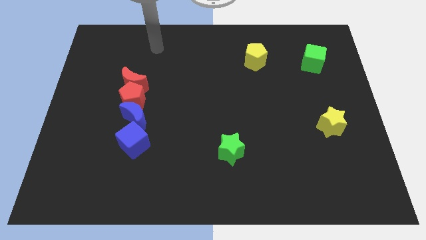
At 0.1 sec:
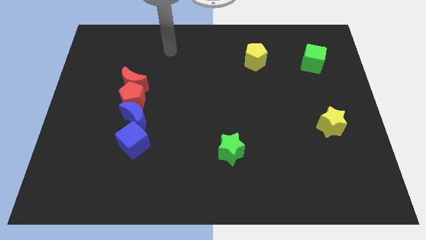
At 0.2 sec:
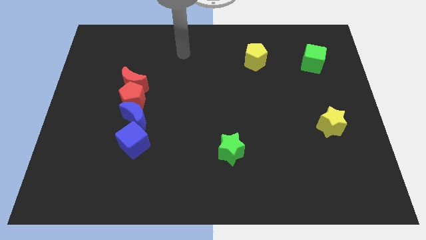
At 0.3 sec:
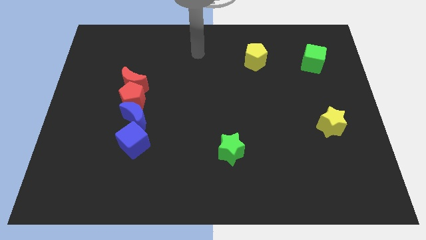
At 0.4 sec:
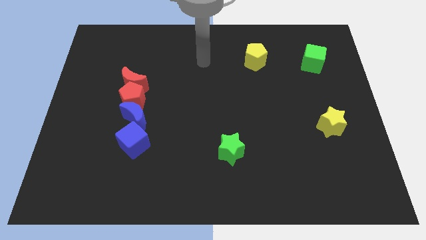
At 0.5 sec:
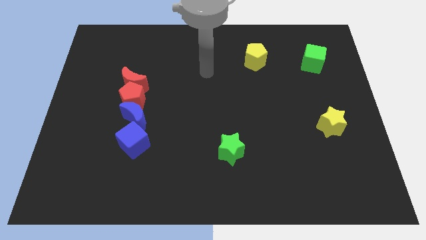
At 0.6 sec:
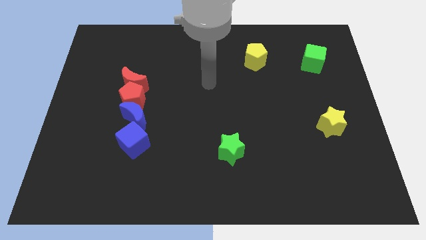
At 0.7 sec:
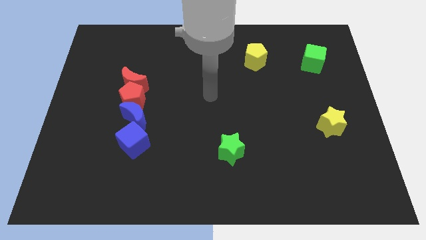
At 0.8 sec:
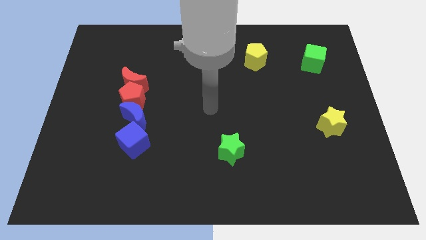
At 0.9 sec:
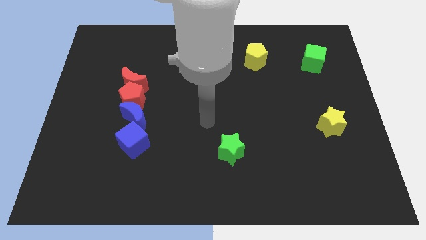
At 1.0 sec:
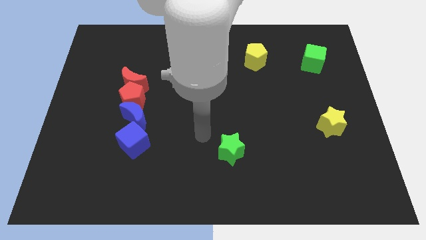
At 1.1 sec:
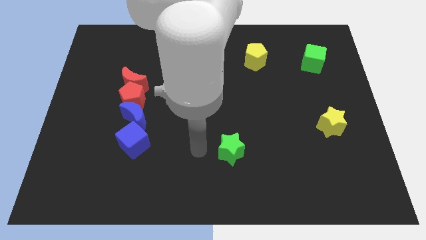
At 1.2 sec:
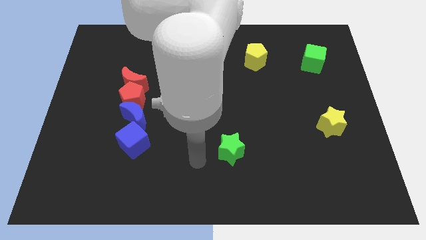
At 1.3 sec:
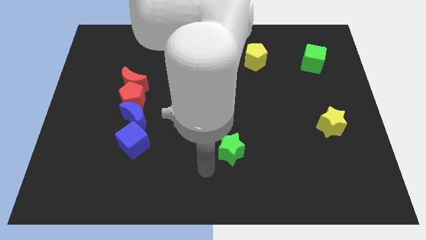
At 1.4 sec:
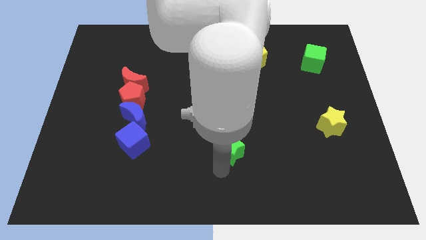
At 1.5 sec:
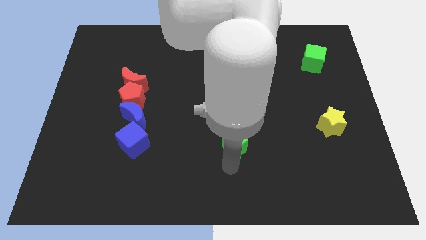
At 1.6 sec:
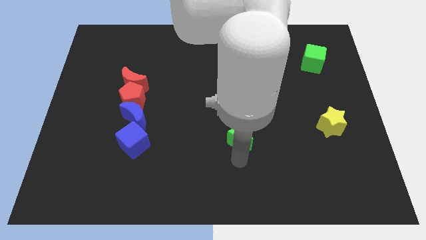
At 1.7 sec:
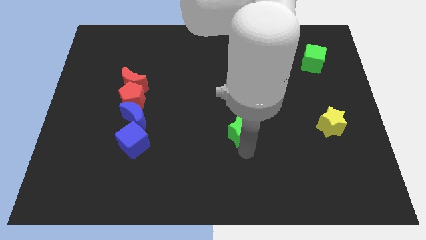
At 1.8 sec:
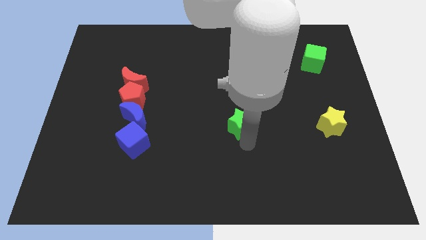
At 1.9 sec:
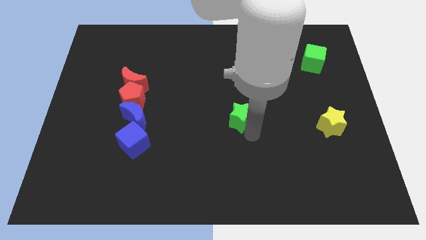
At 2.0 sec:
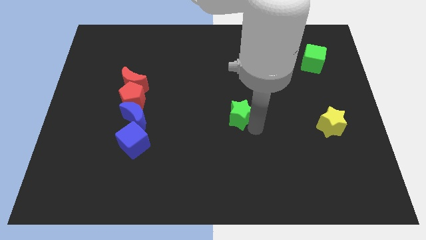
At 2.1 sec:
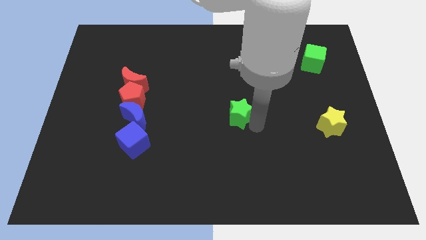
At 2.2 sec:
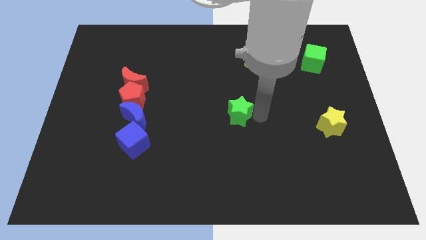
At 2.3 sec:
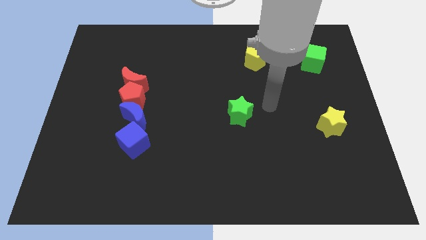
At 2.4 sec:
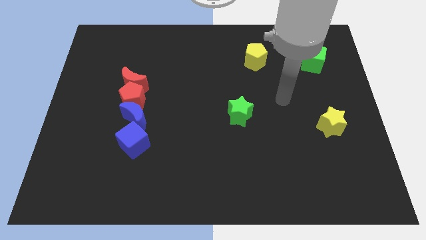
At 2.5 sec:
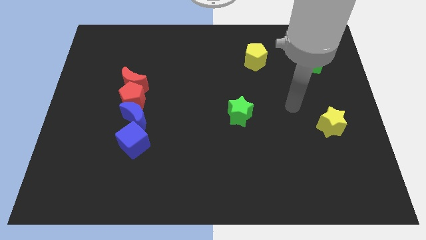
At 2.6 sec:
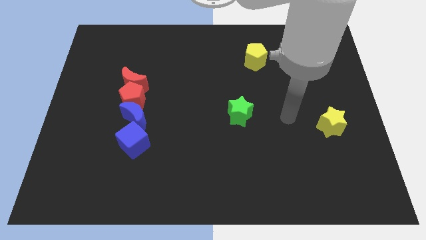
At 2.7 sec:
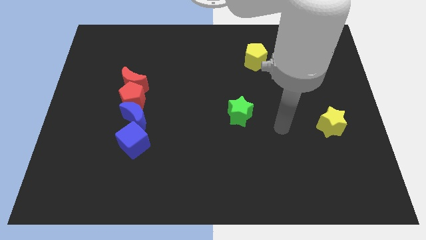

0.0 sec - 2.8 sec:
place the green star the right of the blue moon

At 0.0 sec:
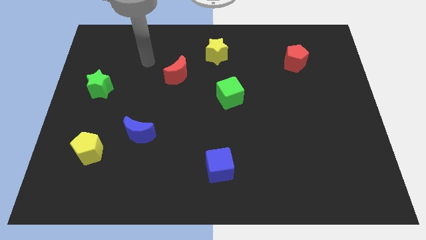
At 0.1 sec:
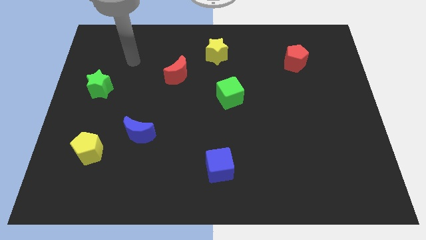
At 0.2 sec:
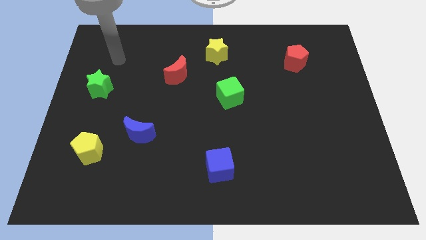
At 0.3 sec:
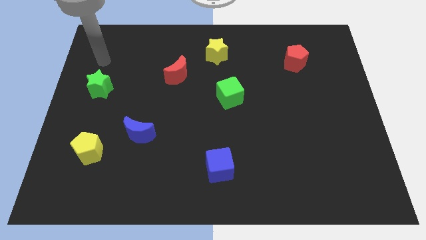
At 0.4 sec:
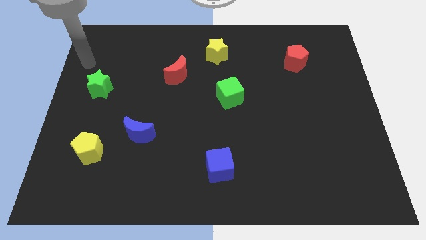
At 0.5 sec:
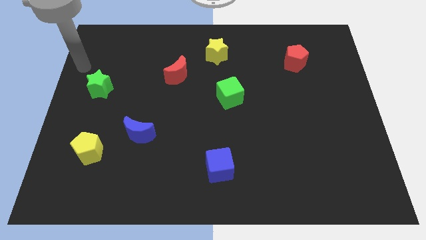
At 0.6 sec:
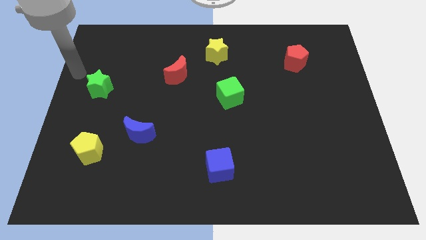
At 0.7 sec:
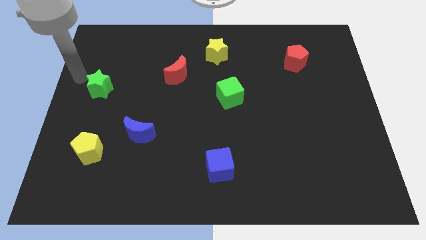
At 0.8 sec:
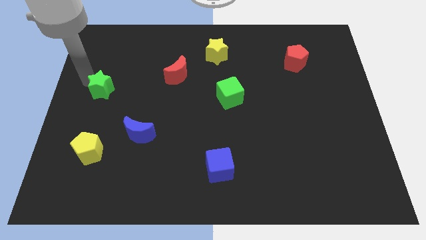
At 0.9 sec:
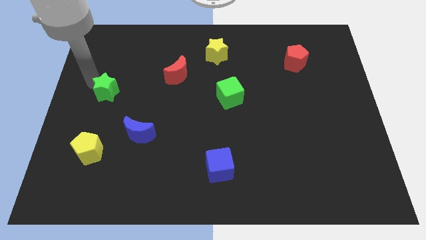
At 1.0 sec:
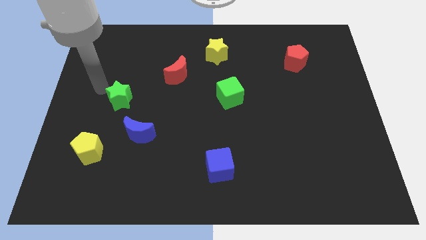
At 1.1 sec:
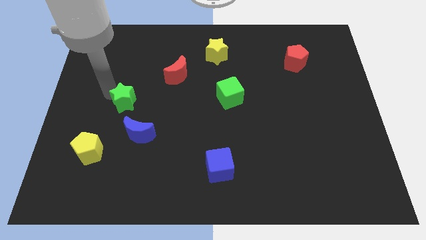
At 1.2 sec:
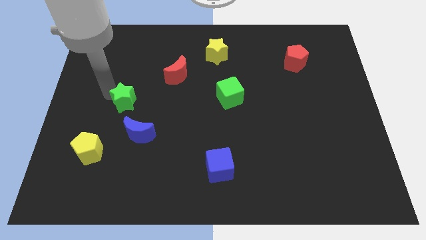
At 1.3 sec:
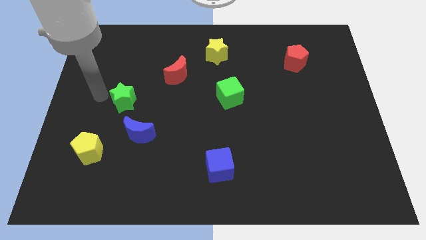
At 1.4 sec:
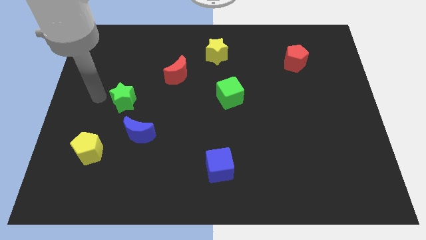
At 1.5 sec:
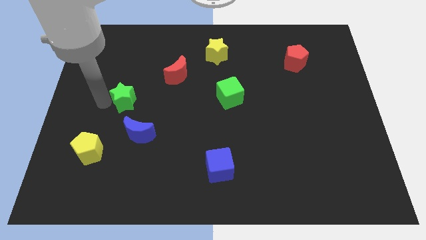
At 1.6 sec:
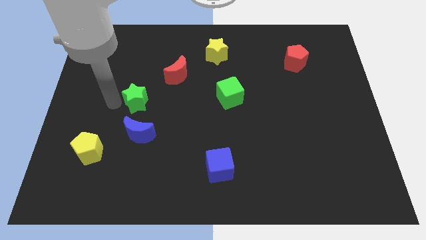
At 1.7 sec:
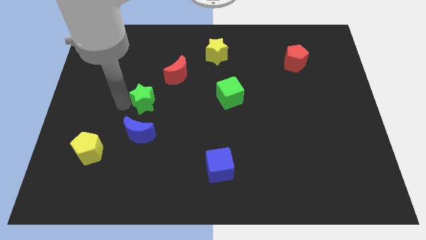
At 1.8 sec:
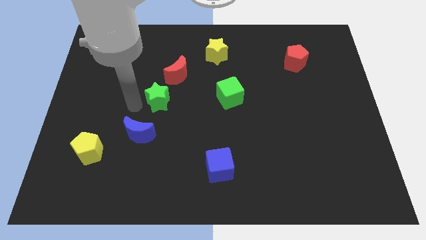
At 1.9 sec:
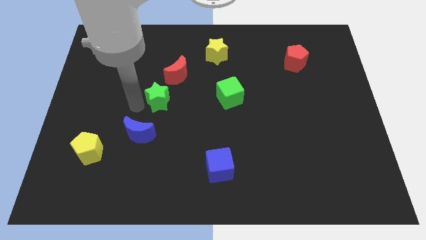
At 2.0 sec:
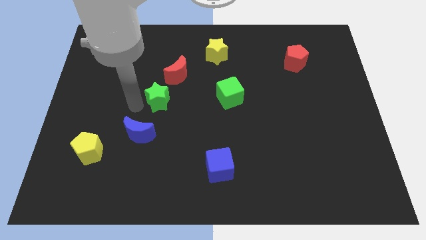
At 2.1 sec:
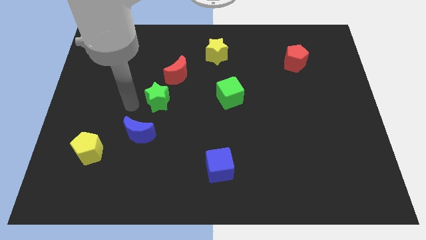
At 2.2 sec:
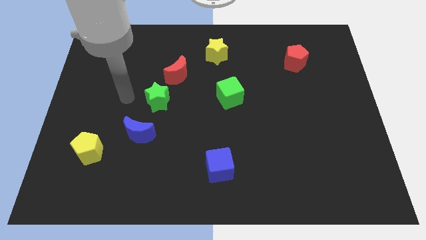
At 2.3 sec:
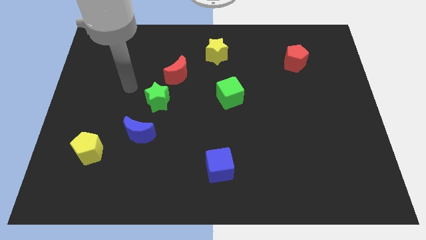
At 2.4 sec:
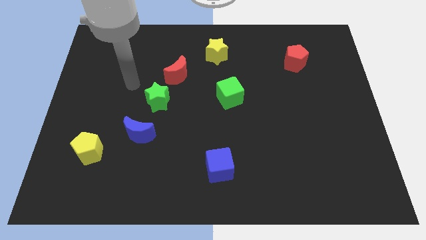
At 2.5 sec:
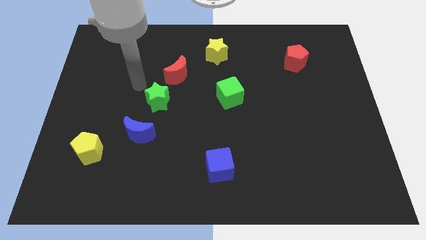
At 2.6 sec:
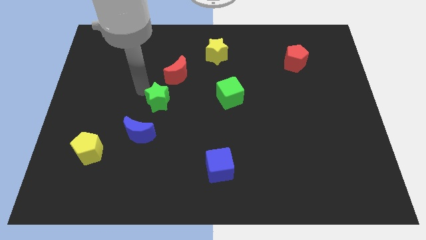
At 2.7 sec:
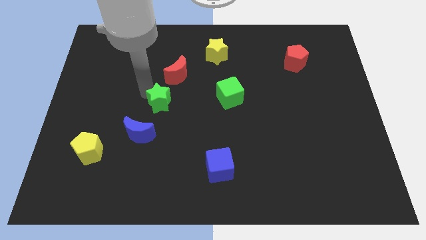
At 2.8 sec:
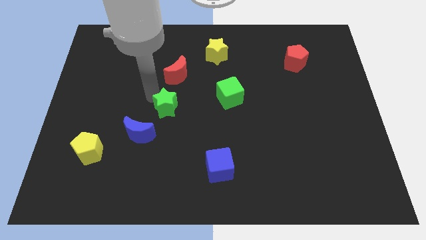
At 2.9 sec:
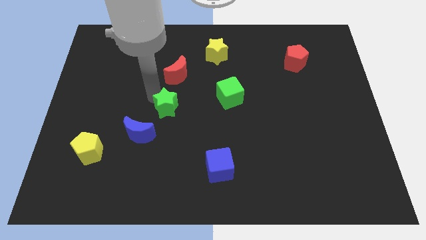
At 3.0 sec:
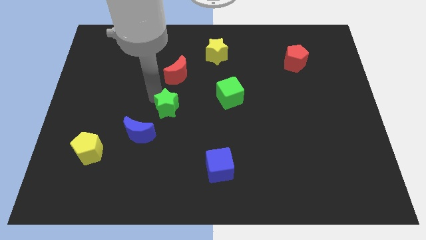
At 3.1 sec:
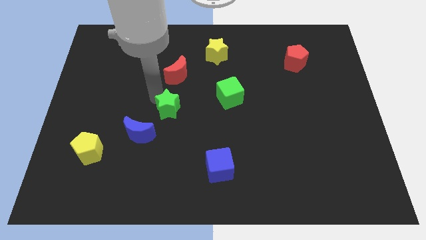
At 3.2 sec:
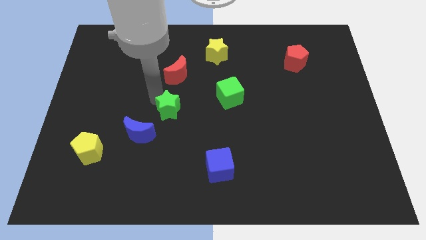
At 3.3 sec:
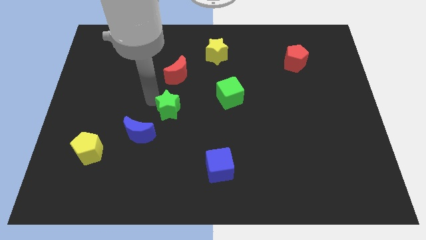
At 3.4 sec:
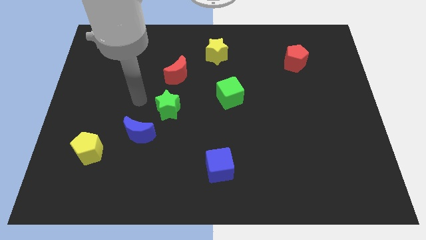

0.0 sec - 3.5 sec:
move the green star to the bottom side of the red crescent

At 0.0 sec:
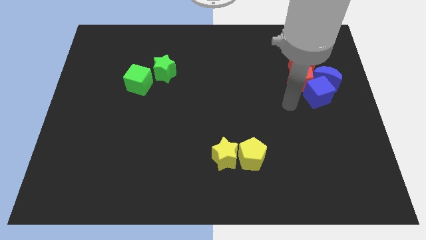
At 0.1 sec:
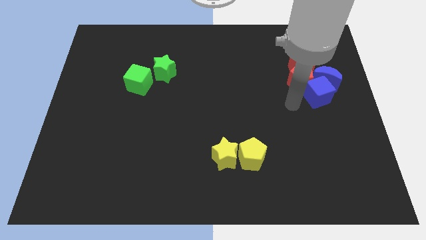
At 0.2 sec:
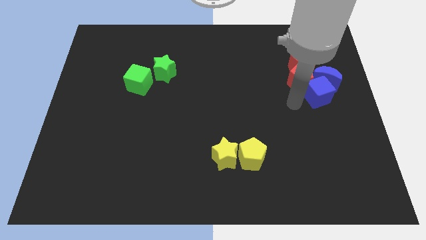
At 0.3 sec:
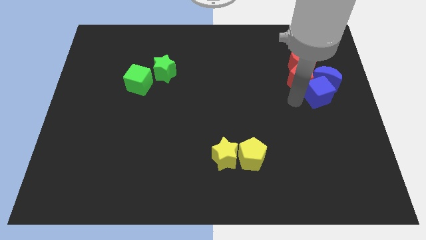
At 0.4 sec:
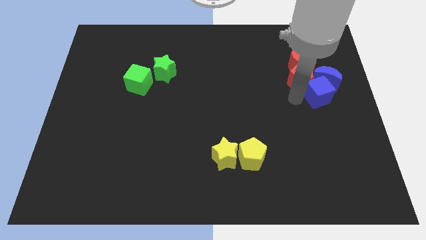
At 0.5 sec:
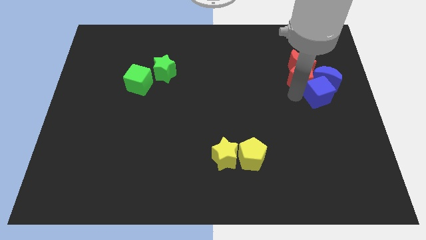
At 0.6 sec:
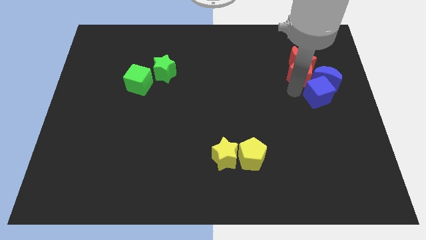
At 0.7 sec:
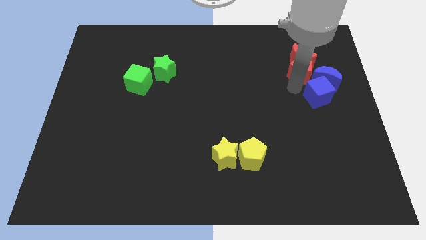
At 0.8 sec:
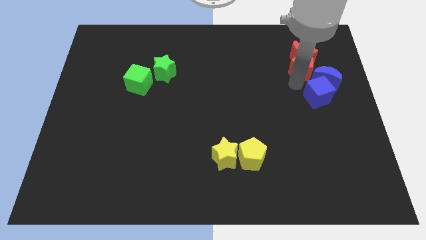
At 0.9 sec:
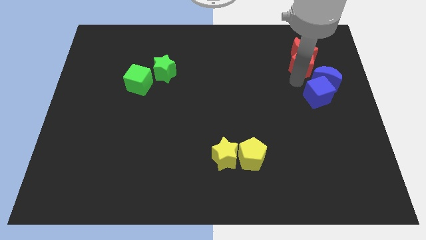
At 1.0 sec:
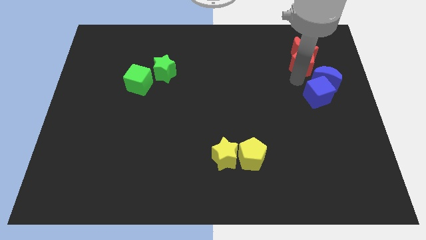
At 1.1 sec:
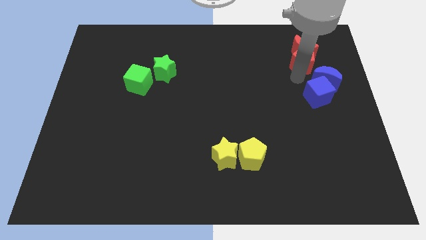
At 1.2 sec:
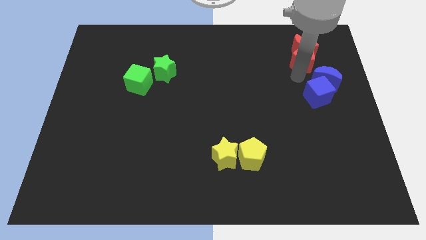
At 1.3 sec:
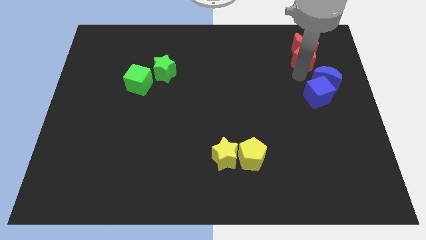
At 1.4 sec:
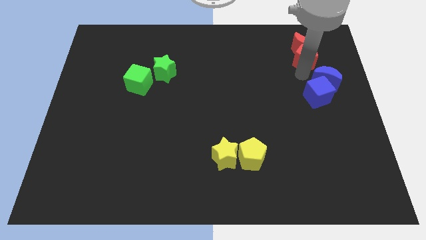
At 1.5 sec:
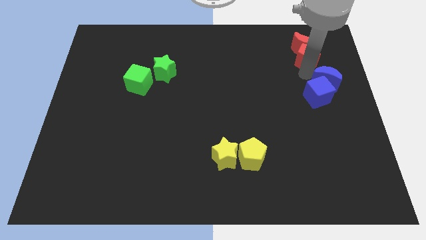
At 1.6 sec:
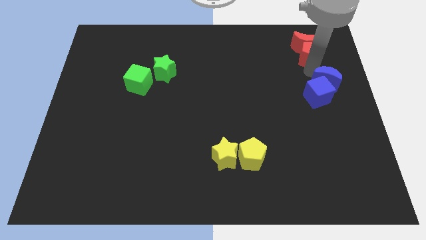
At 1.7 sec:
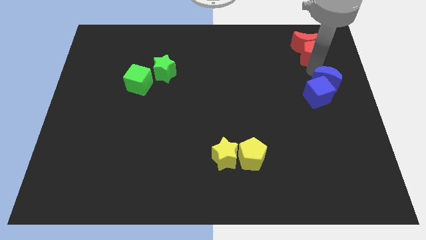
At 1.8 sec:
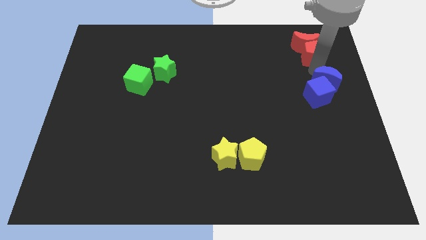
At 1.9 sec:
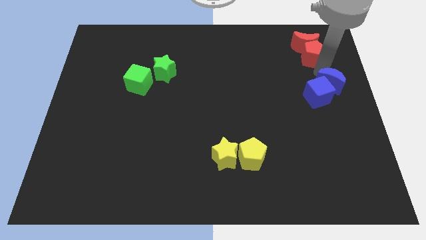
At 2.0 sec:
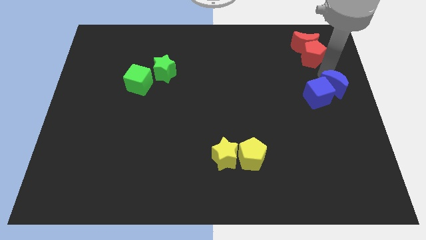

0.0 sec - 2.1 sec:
separate red blocks from blue blocks

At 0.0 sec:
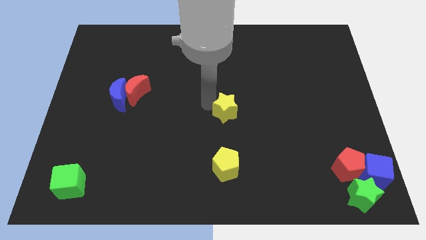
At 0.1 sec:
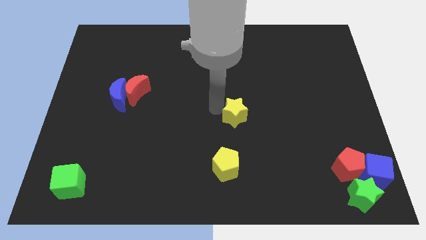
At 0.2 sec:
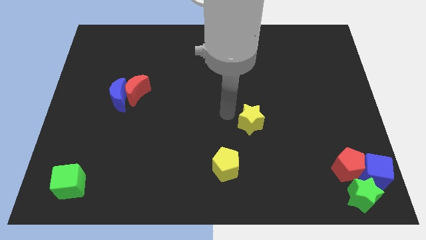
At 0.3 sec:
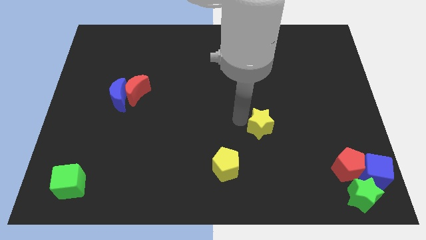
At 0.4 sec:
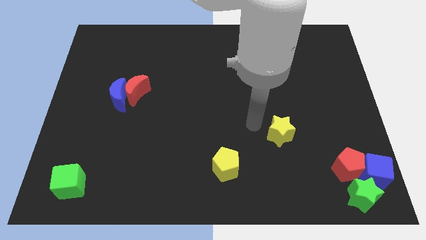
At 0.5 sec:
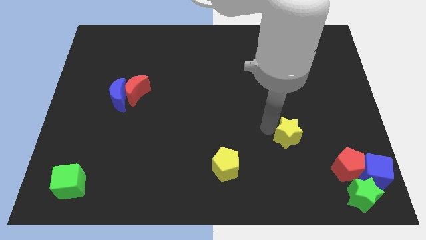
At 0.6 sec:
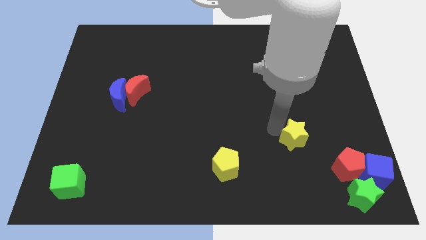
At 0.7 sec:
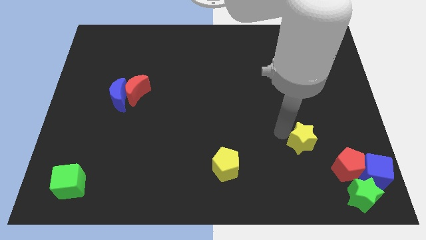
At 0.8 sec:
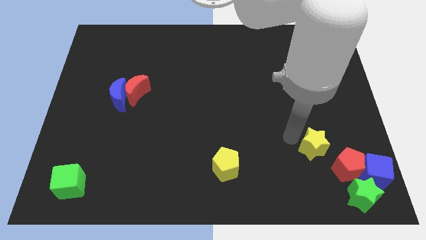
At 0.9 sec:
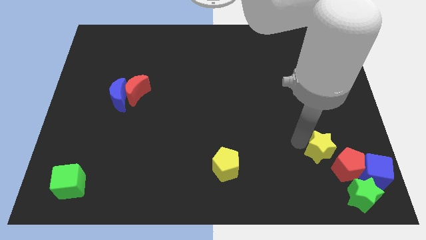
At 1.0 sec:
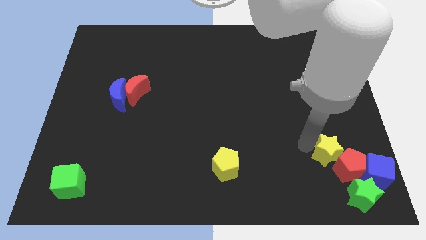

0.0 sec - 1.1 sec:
push the yellow star diagonal to the red pentagon
